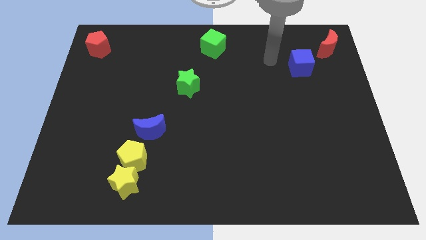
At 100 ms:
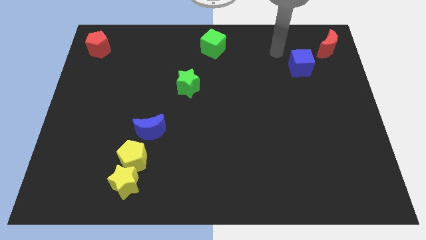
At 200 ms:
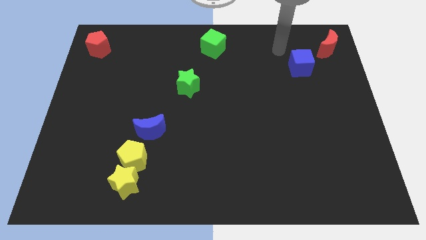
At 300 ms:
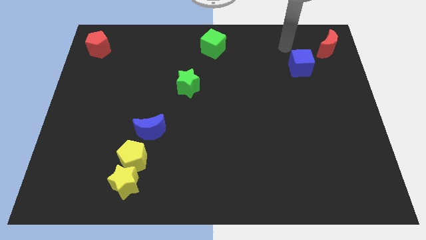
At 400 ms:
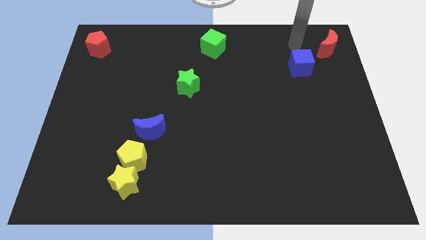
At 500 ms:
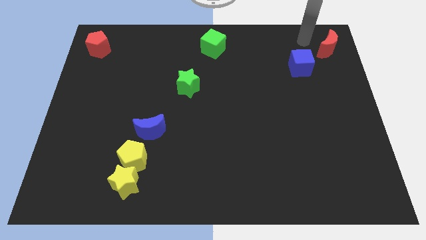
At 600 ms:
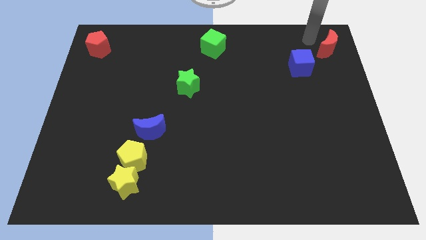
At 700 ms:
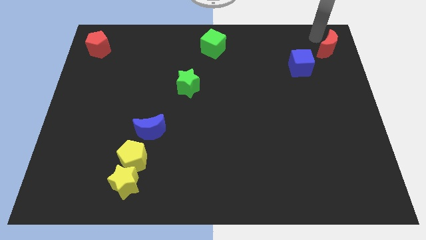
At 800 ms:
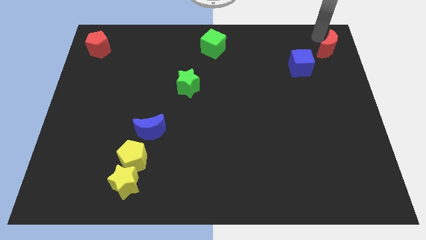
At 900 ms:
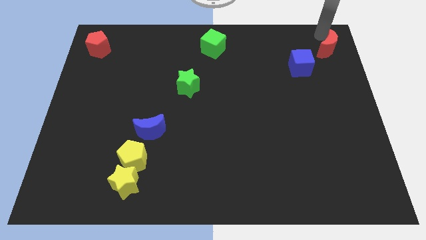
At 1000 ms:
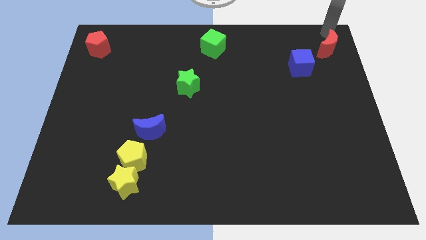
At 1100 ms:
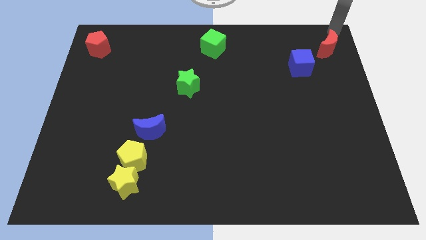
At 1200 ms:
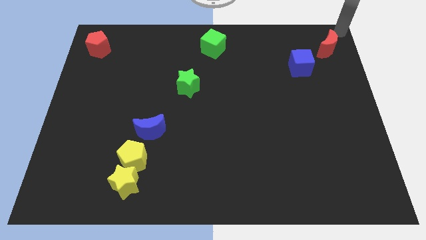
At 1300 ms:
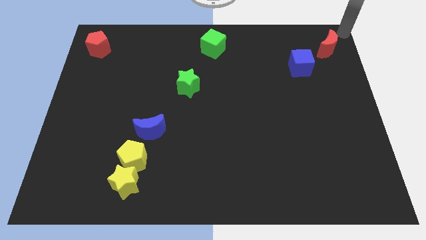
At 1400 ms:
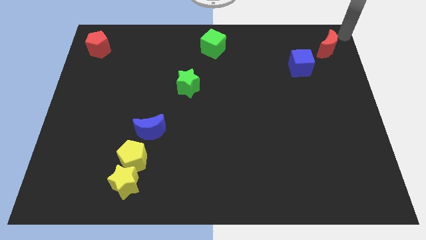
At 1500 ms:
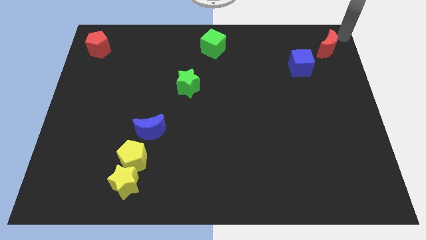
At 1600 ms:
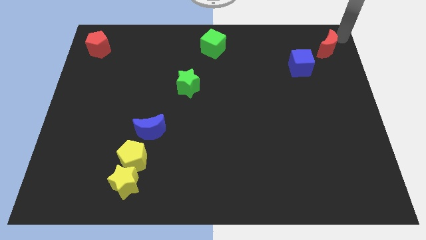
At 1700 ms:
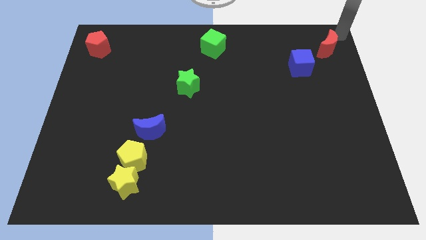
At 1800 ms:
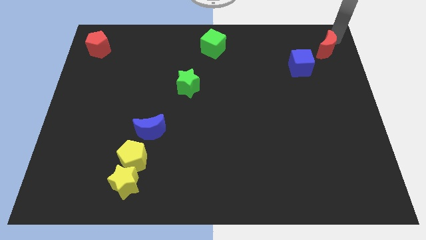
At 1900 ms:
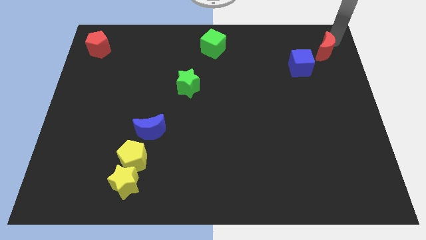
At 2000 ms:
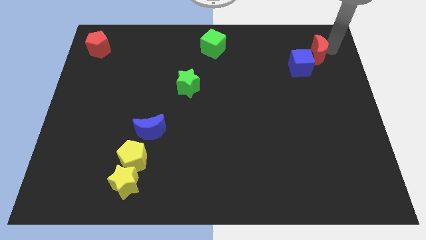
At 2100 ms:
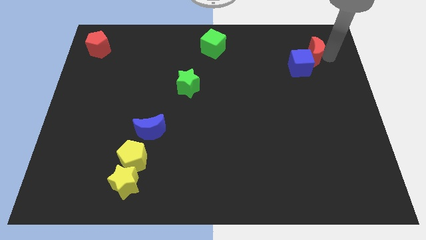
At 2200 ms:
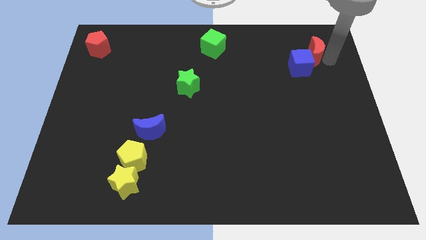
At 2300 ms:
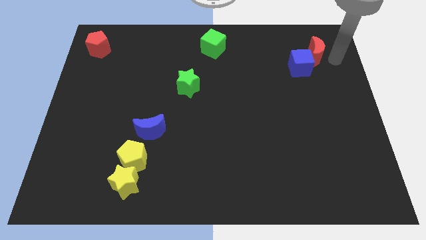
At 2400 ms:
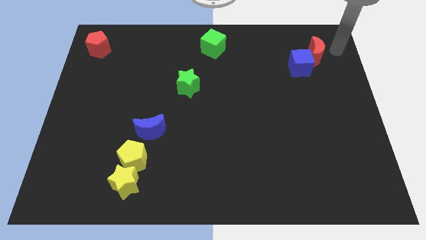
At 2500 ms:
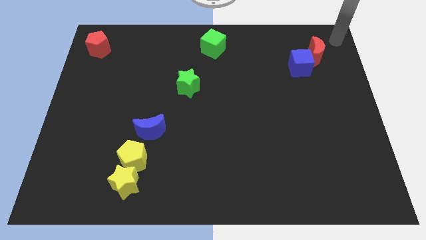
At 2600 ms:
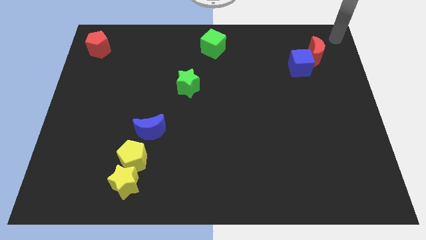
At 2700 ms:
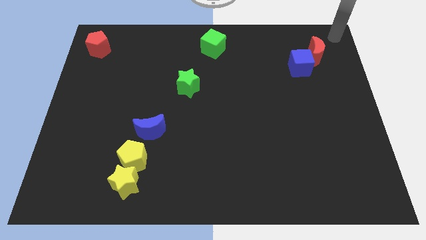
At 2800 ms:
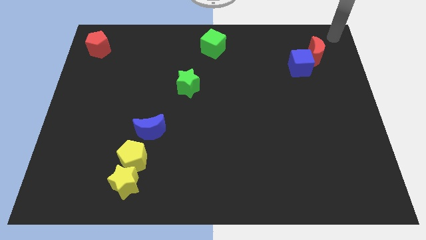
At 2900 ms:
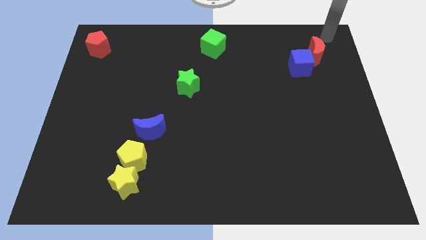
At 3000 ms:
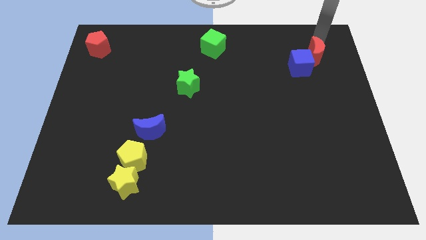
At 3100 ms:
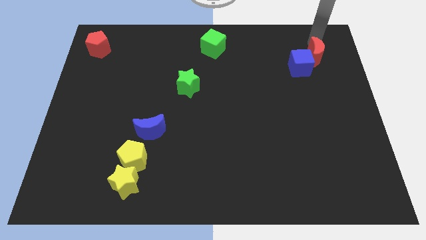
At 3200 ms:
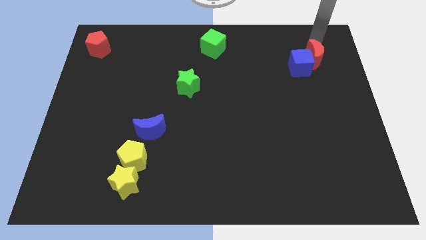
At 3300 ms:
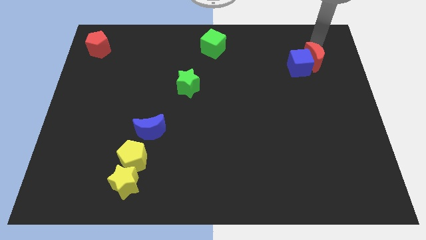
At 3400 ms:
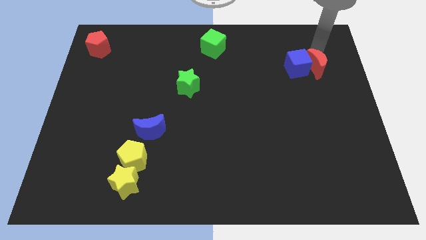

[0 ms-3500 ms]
push the red moon into the blue cube

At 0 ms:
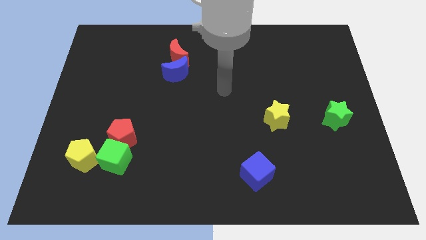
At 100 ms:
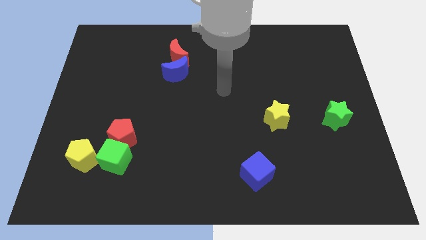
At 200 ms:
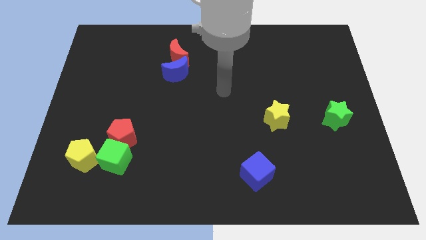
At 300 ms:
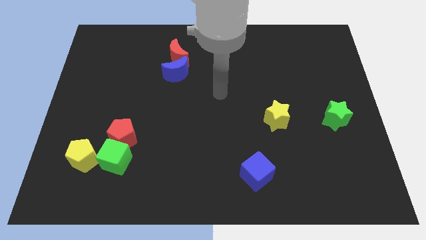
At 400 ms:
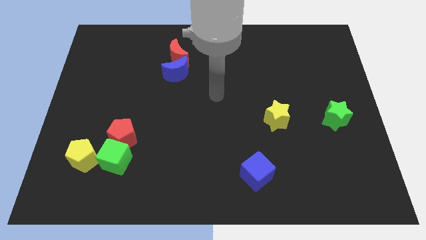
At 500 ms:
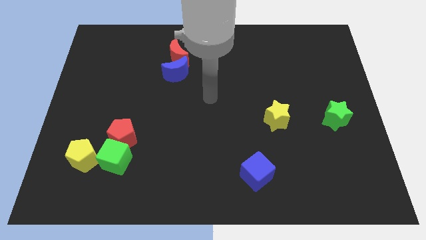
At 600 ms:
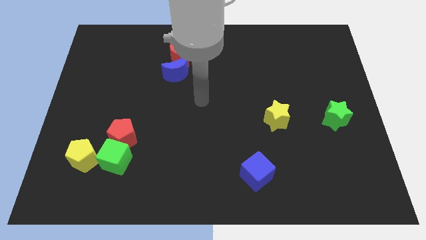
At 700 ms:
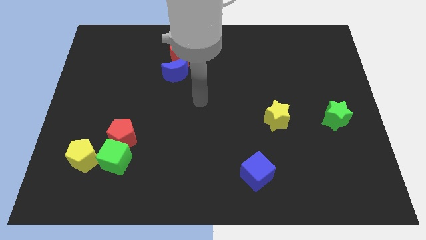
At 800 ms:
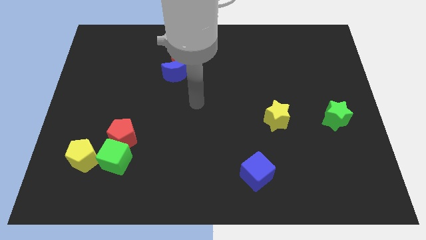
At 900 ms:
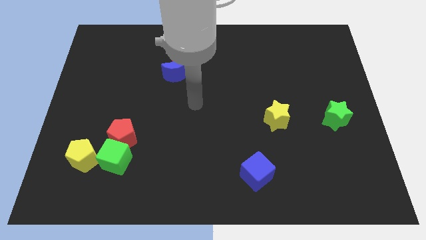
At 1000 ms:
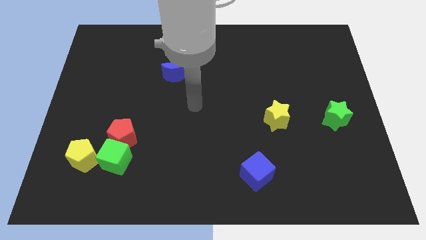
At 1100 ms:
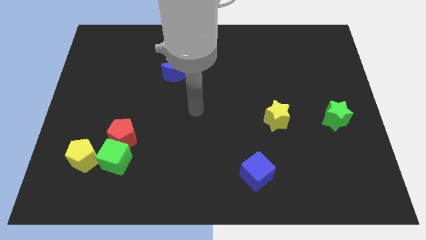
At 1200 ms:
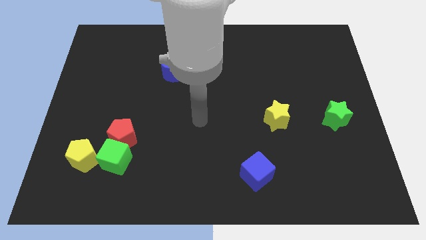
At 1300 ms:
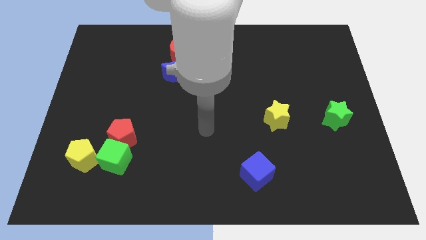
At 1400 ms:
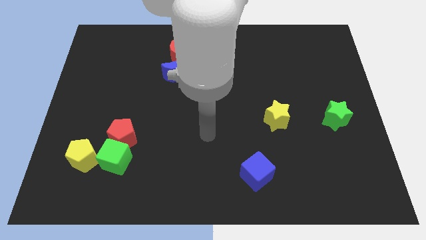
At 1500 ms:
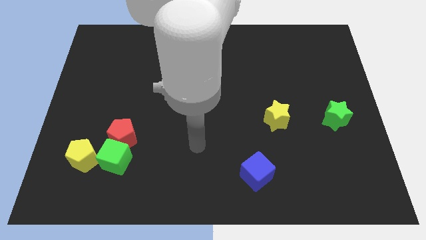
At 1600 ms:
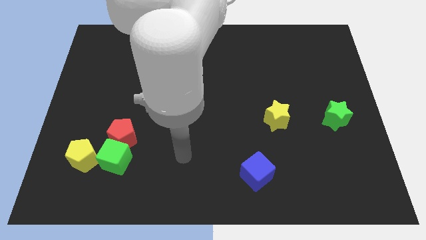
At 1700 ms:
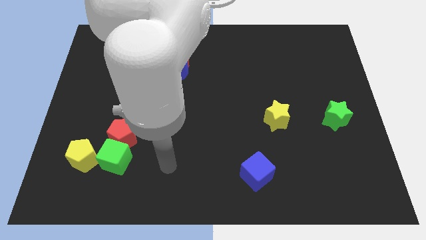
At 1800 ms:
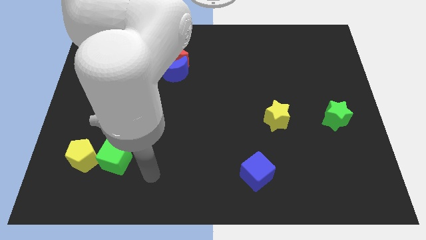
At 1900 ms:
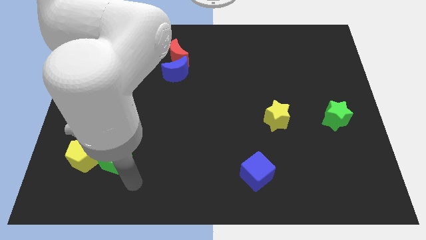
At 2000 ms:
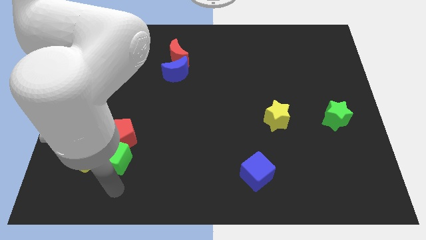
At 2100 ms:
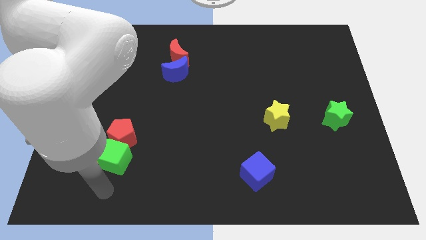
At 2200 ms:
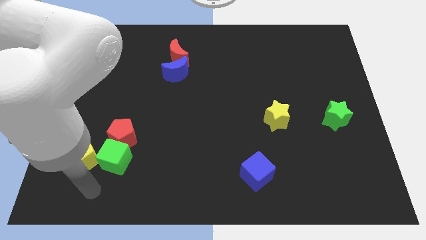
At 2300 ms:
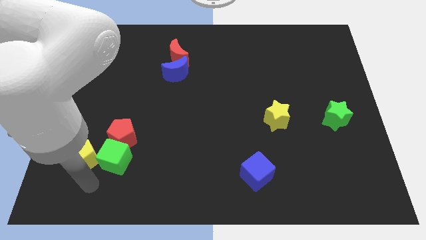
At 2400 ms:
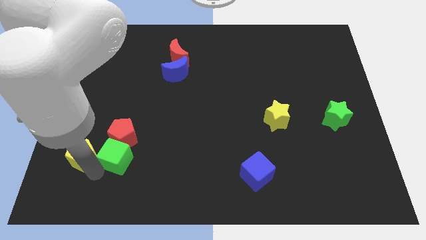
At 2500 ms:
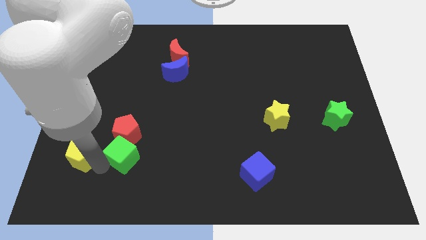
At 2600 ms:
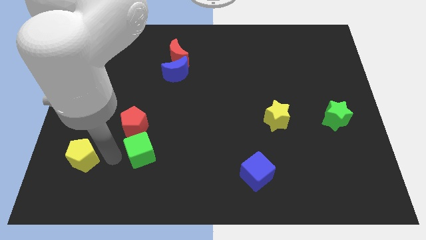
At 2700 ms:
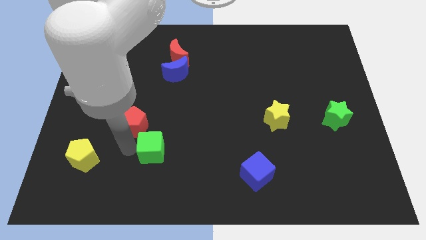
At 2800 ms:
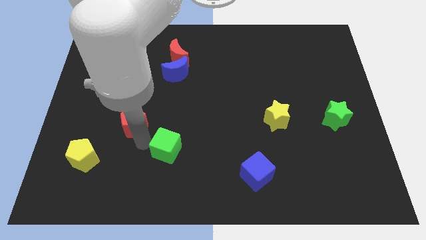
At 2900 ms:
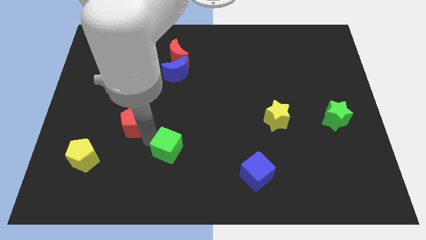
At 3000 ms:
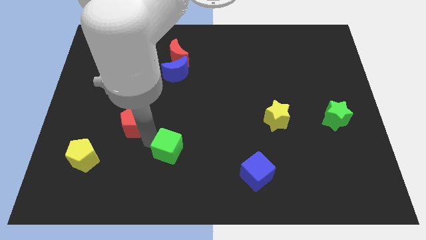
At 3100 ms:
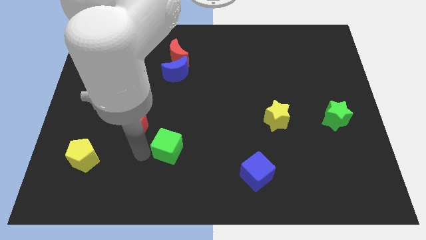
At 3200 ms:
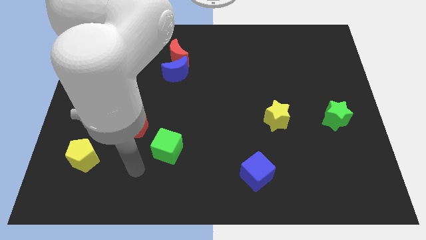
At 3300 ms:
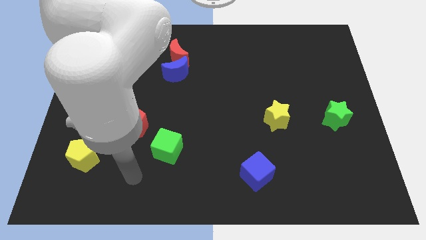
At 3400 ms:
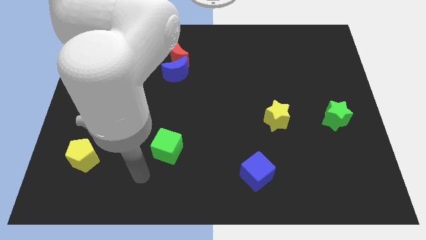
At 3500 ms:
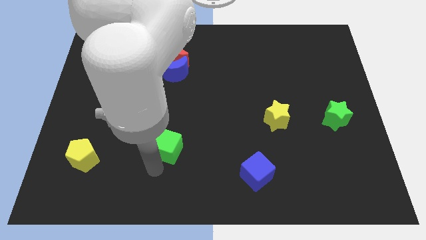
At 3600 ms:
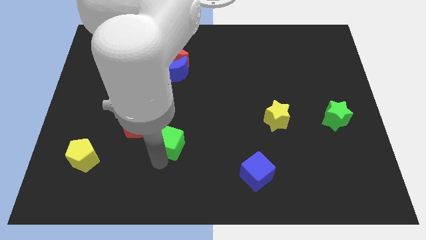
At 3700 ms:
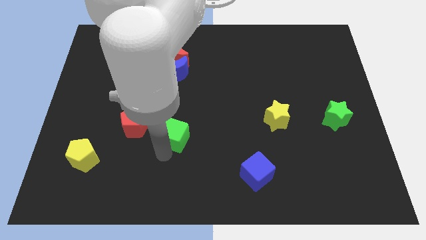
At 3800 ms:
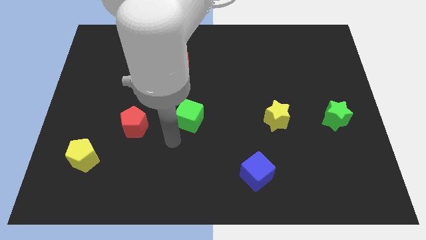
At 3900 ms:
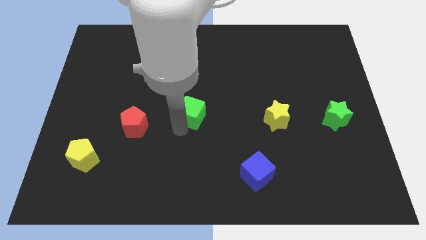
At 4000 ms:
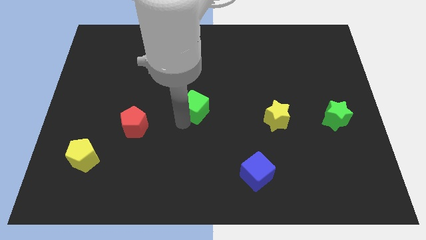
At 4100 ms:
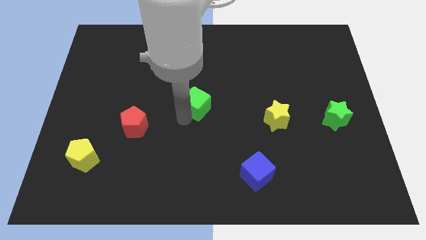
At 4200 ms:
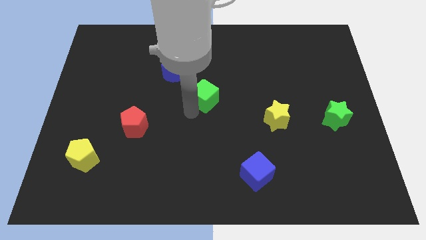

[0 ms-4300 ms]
separate the green cube away from the red pentagon

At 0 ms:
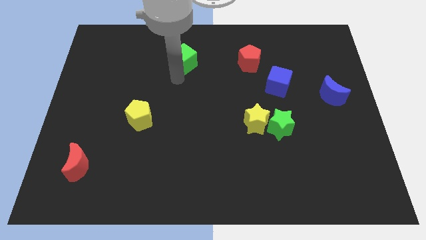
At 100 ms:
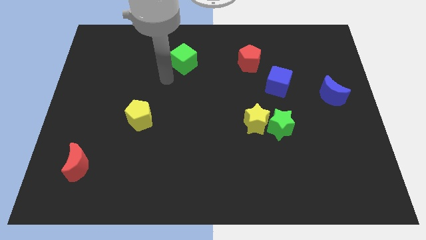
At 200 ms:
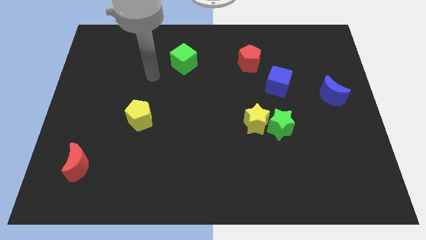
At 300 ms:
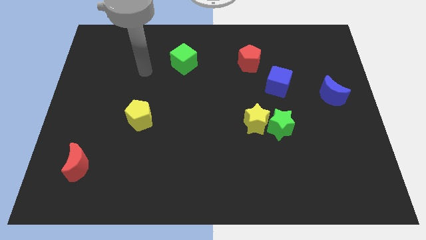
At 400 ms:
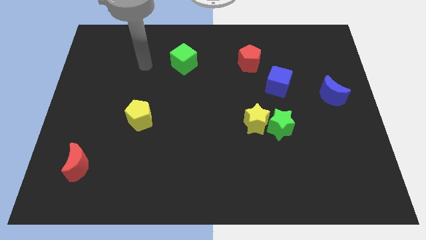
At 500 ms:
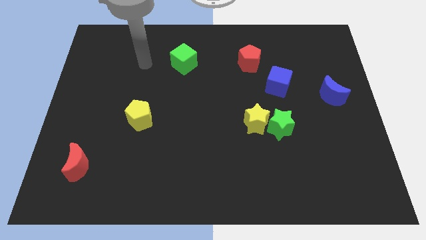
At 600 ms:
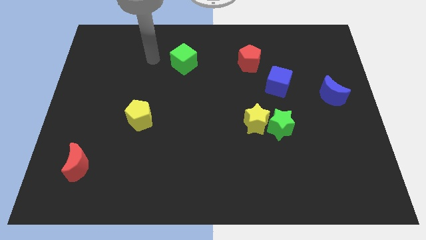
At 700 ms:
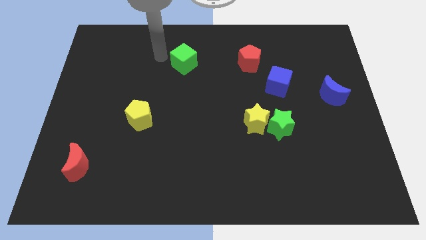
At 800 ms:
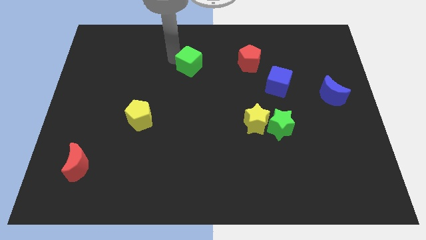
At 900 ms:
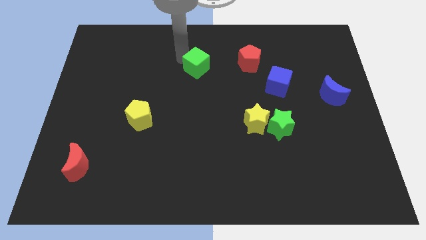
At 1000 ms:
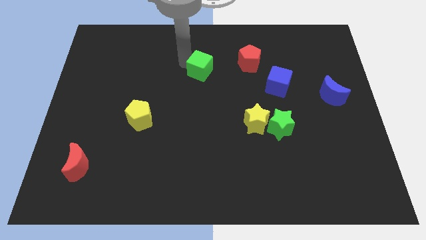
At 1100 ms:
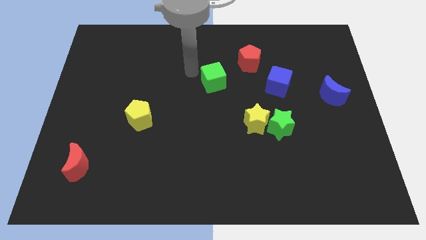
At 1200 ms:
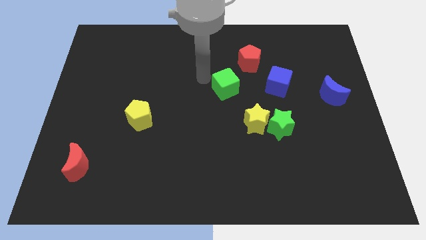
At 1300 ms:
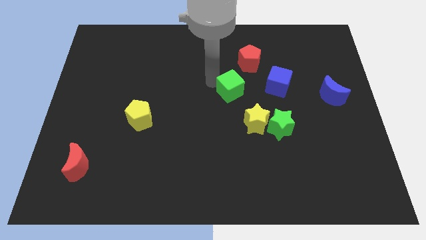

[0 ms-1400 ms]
move the green cube to the center
